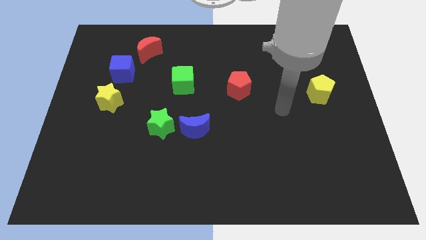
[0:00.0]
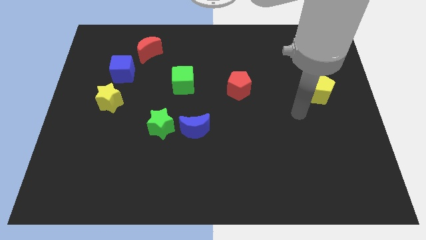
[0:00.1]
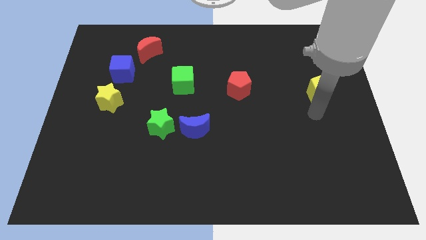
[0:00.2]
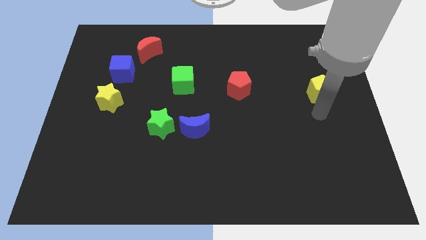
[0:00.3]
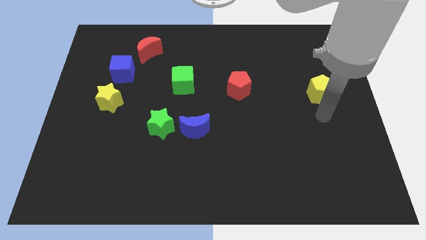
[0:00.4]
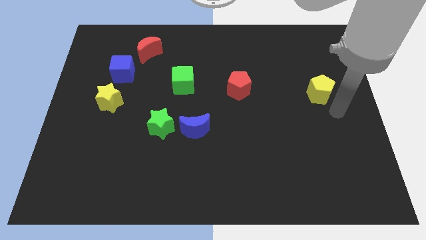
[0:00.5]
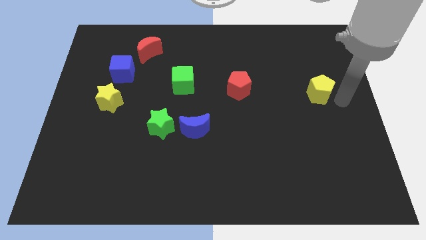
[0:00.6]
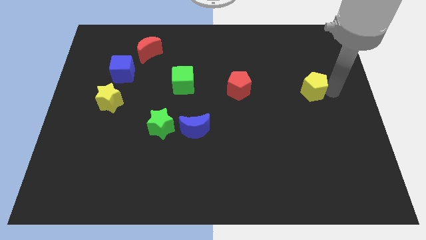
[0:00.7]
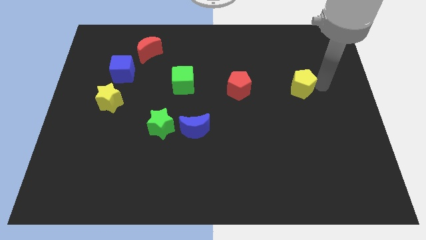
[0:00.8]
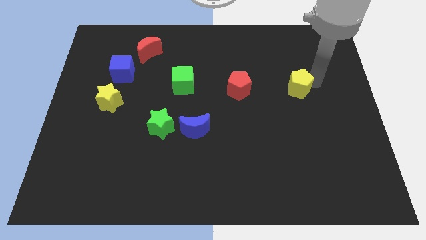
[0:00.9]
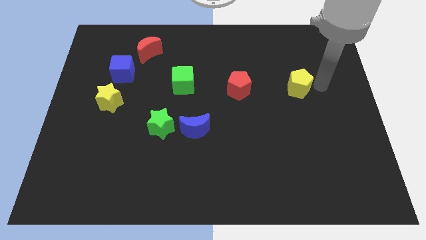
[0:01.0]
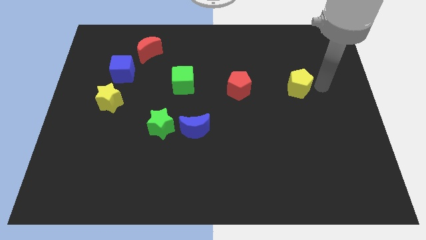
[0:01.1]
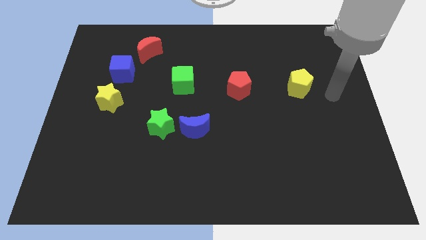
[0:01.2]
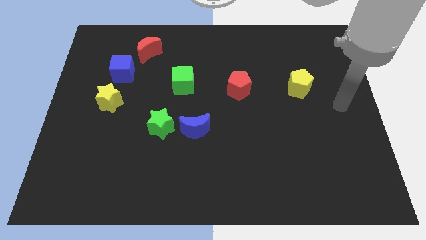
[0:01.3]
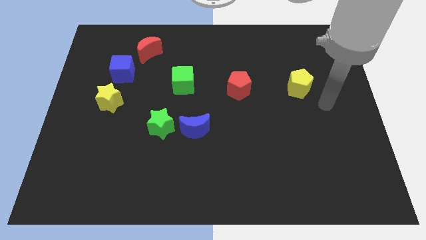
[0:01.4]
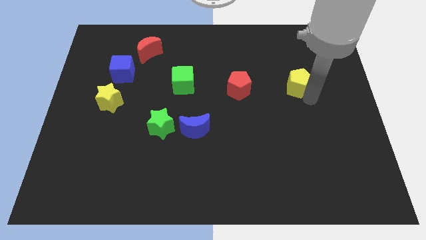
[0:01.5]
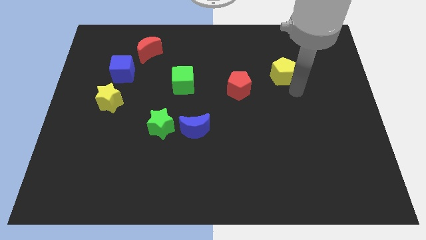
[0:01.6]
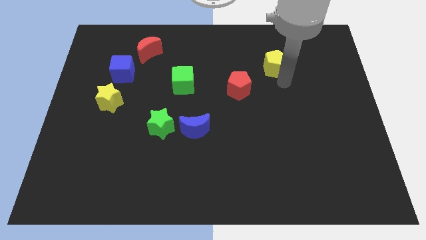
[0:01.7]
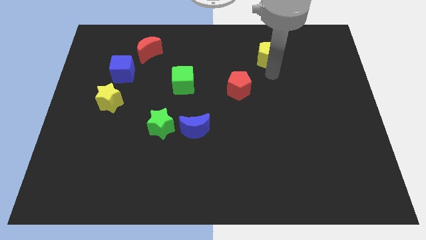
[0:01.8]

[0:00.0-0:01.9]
push yellow pentagon towards the top center of the board

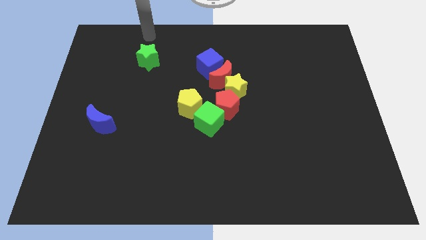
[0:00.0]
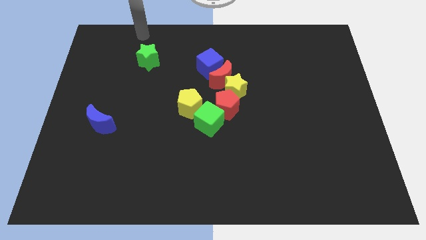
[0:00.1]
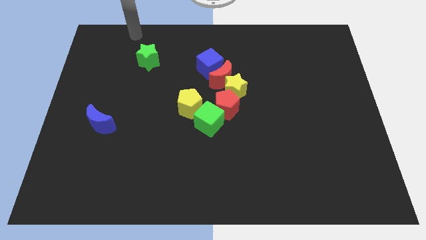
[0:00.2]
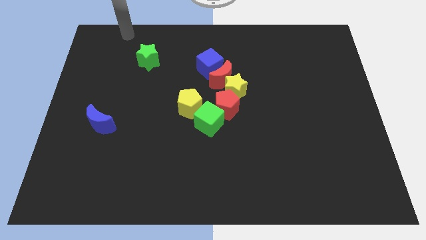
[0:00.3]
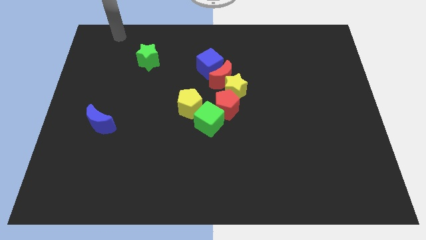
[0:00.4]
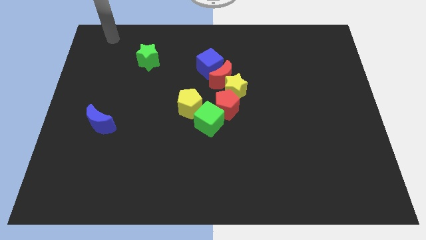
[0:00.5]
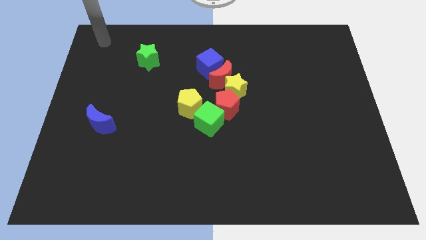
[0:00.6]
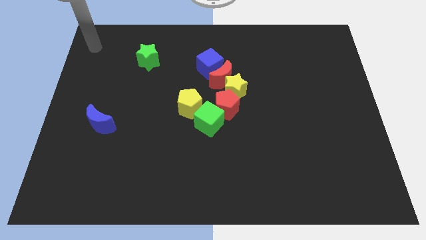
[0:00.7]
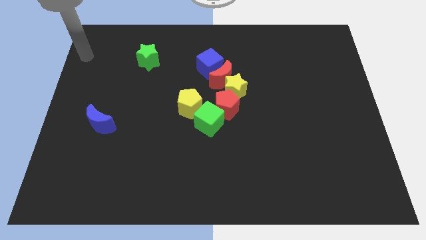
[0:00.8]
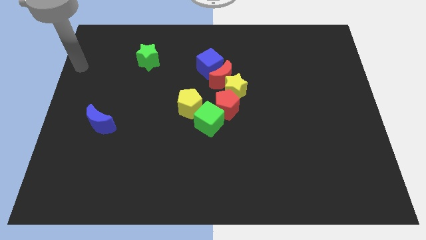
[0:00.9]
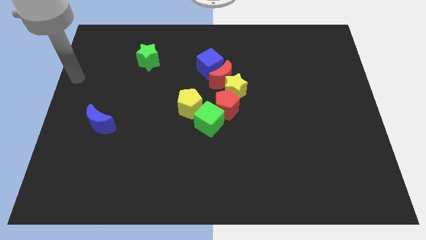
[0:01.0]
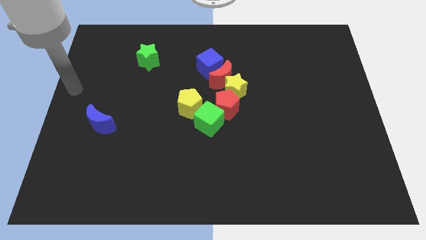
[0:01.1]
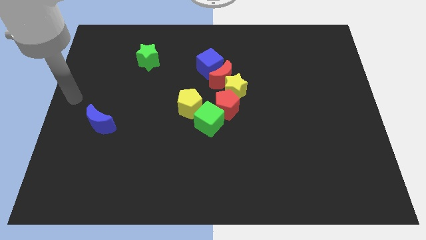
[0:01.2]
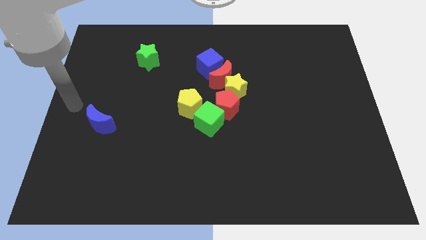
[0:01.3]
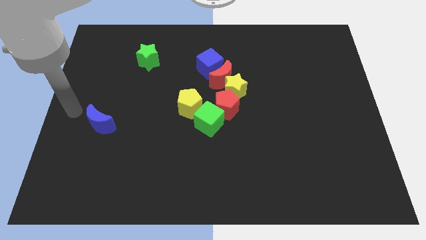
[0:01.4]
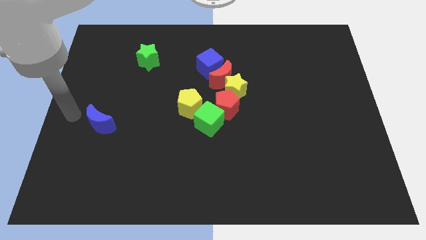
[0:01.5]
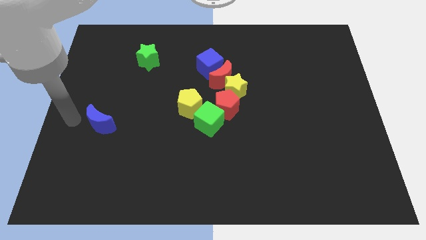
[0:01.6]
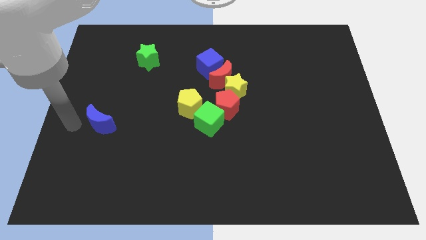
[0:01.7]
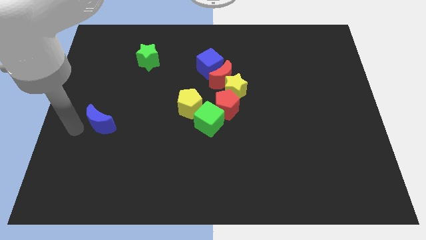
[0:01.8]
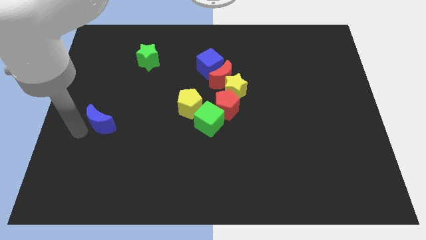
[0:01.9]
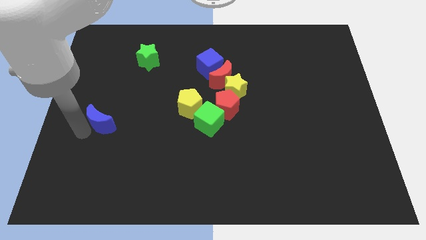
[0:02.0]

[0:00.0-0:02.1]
move your arm to the left of the blue crescent

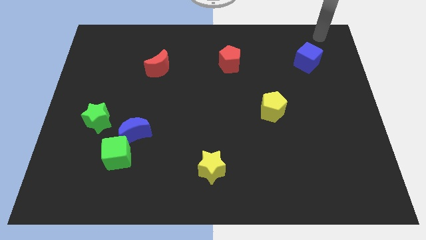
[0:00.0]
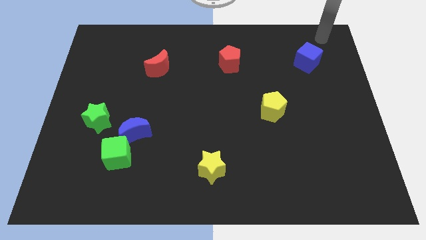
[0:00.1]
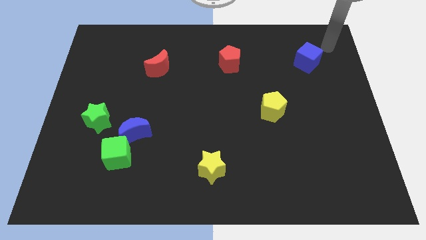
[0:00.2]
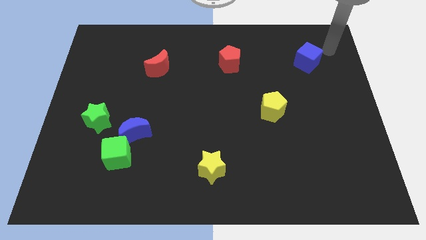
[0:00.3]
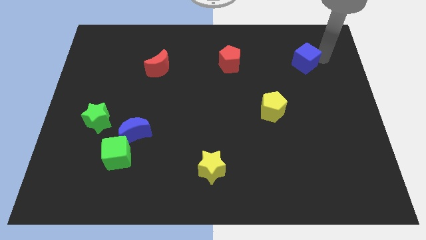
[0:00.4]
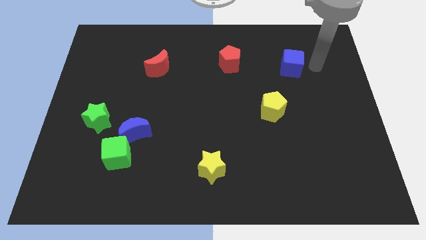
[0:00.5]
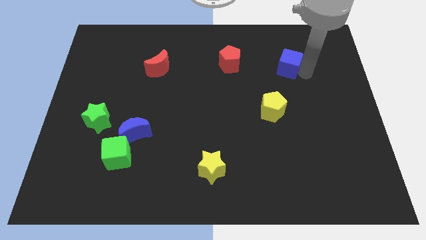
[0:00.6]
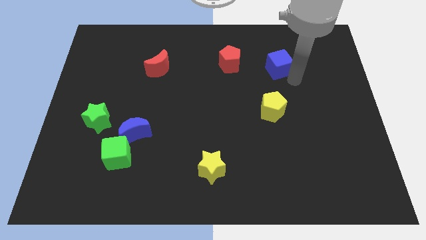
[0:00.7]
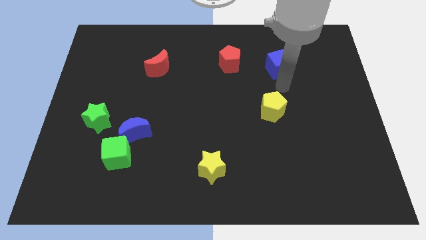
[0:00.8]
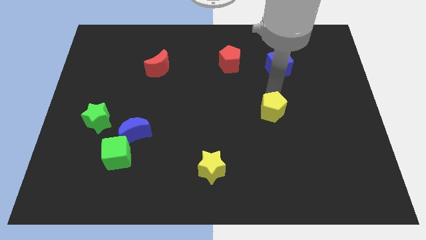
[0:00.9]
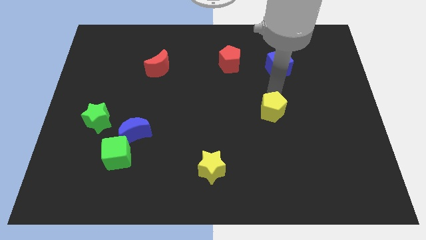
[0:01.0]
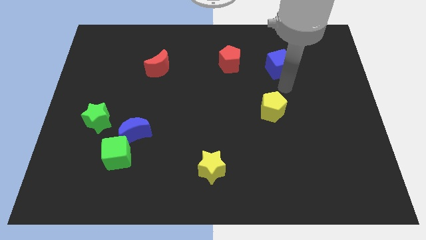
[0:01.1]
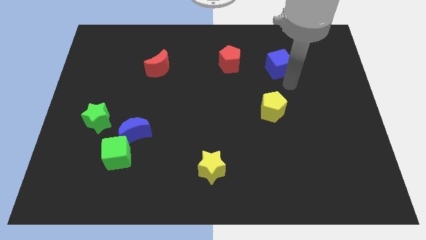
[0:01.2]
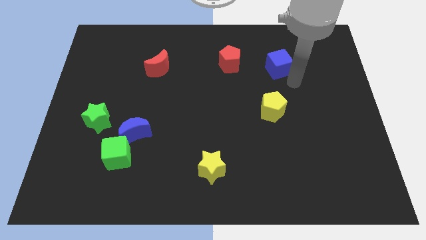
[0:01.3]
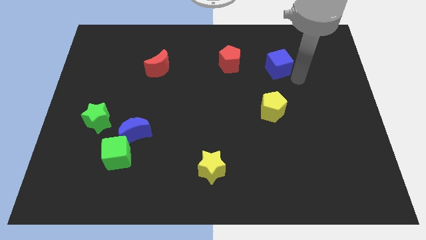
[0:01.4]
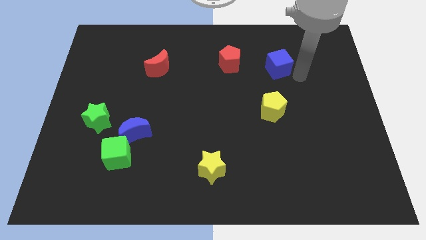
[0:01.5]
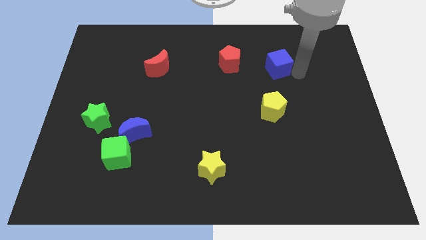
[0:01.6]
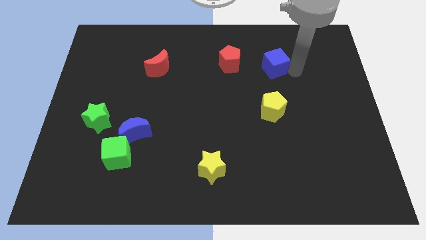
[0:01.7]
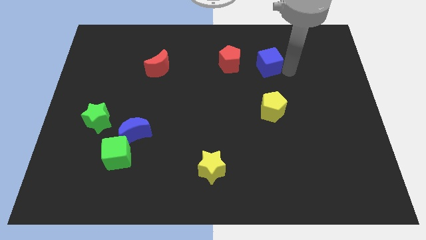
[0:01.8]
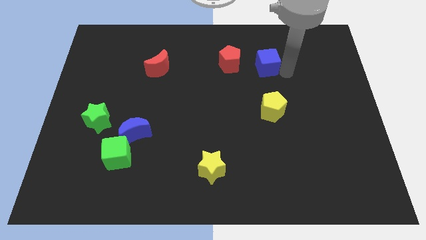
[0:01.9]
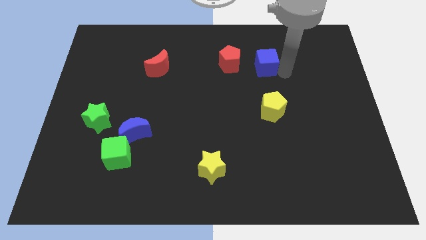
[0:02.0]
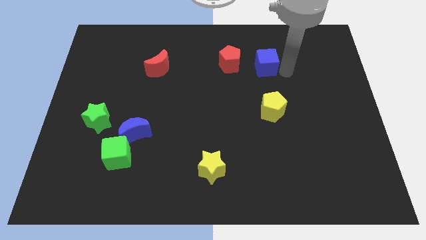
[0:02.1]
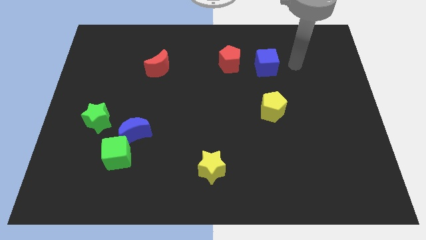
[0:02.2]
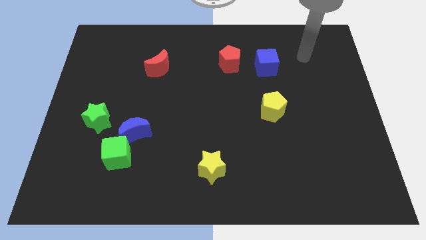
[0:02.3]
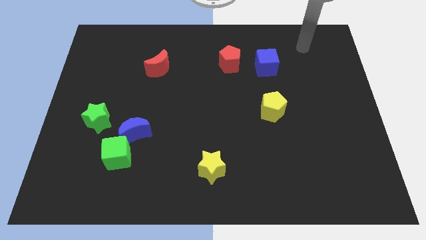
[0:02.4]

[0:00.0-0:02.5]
push the blue cube to the top of the yellow pentagon

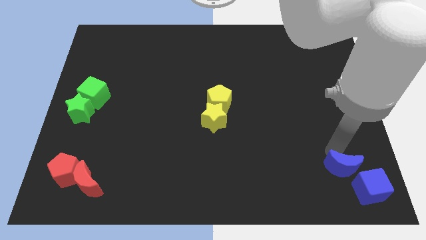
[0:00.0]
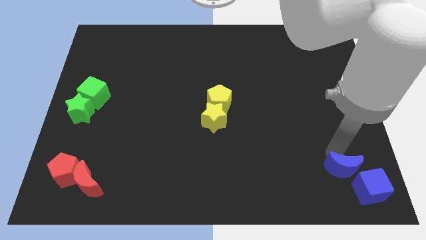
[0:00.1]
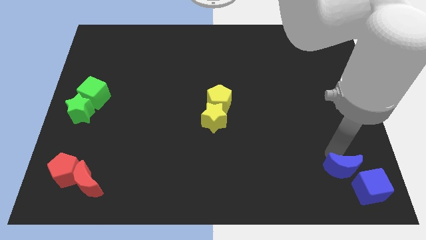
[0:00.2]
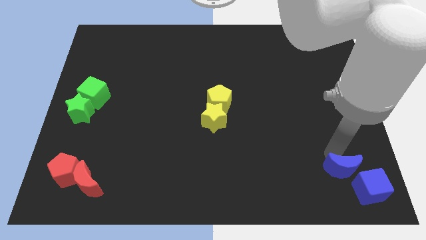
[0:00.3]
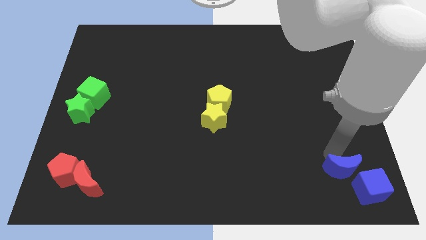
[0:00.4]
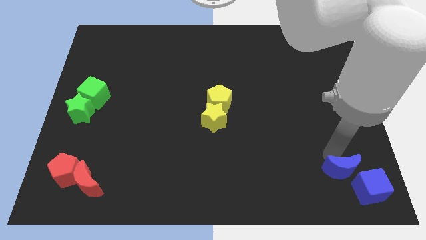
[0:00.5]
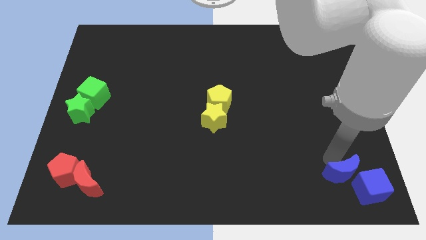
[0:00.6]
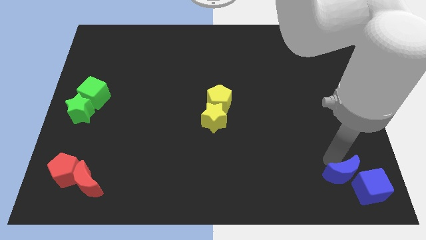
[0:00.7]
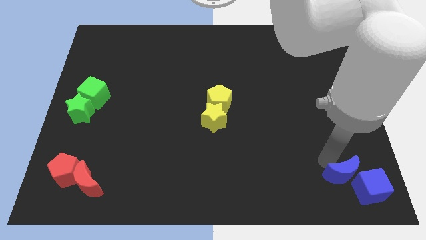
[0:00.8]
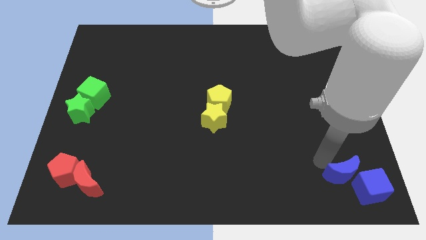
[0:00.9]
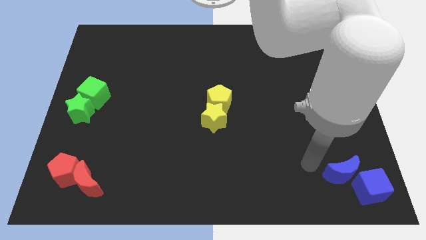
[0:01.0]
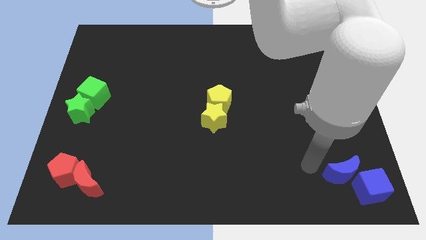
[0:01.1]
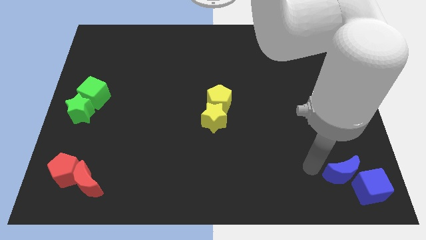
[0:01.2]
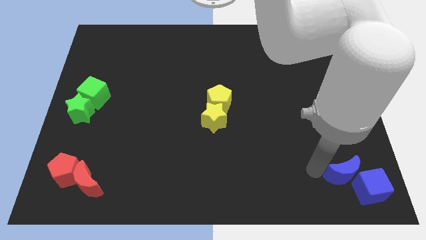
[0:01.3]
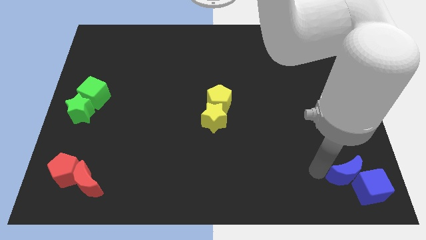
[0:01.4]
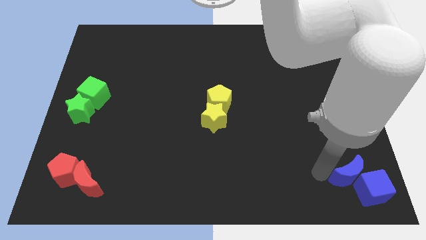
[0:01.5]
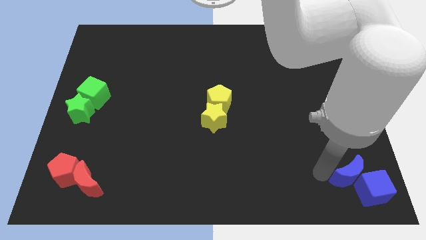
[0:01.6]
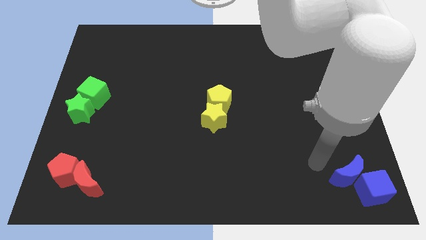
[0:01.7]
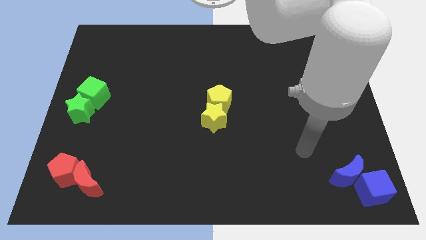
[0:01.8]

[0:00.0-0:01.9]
move the blue moon into the blue cube

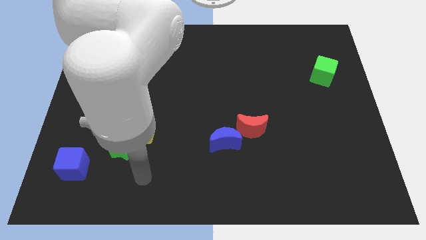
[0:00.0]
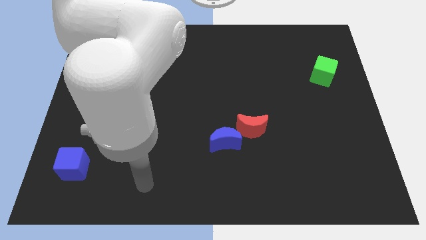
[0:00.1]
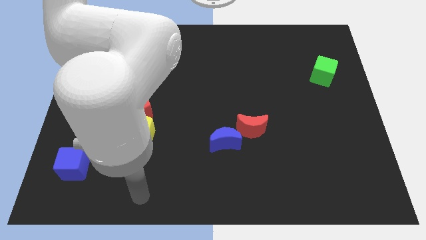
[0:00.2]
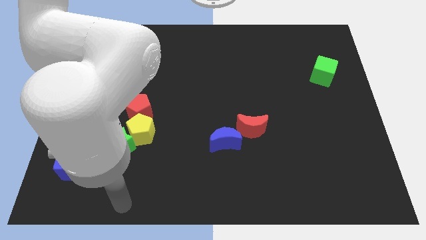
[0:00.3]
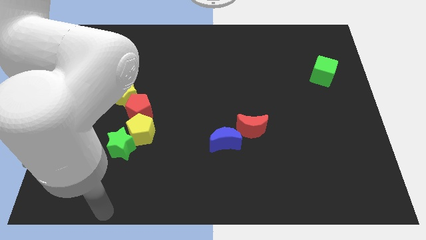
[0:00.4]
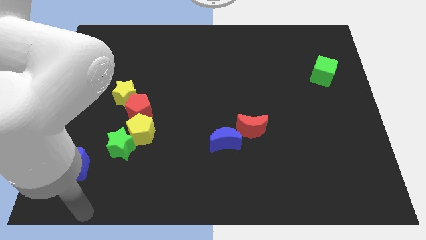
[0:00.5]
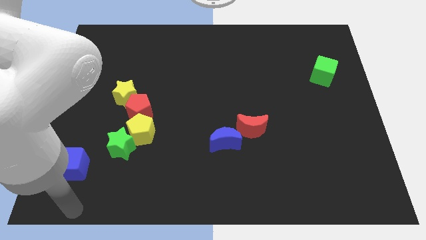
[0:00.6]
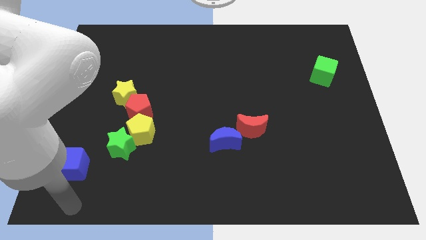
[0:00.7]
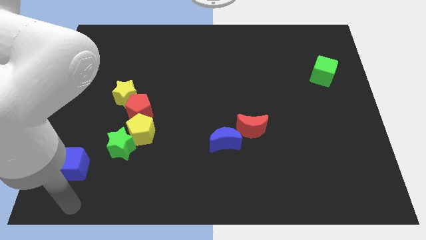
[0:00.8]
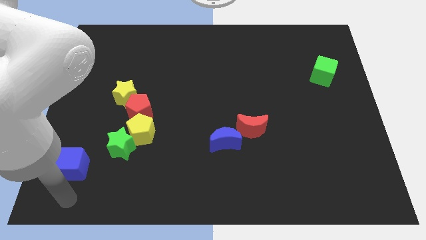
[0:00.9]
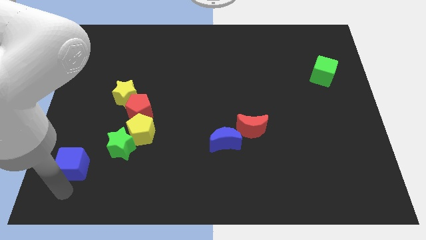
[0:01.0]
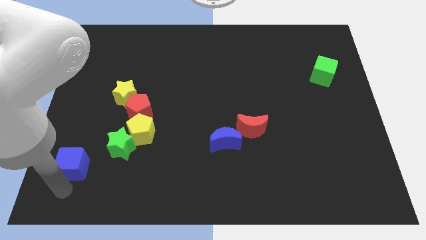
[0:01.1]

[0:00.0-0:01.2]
point your arm to the bottom side of the blue cube
